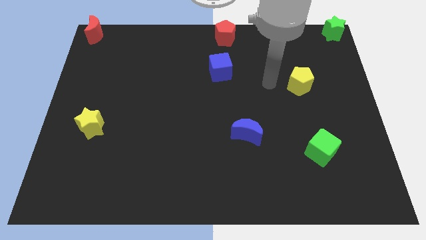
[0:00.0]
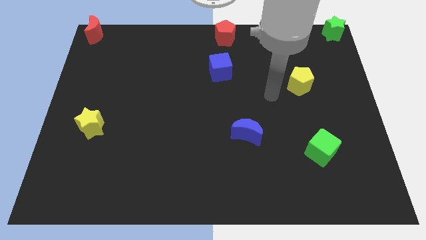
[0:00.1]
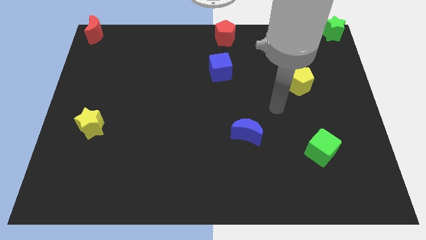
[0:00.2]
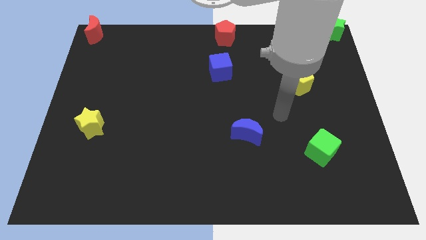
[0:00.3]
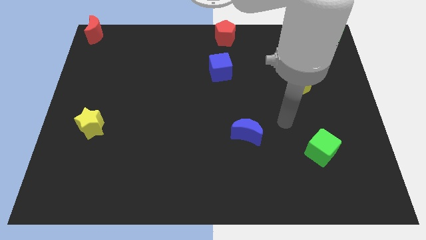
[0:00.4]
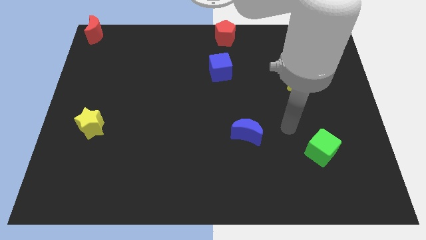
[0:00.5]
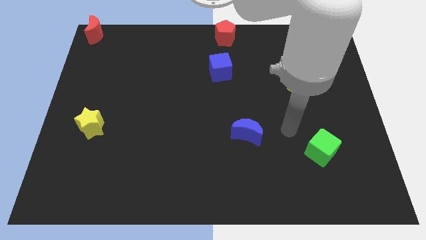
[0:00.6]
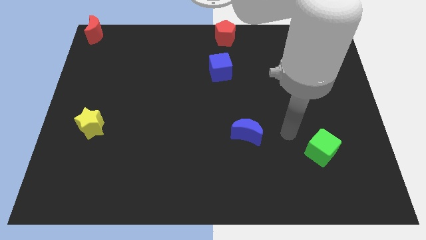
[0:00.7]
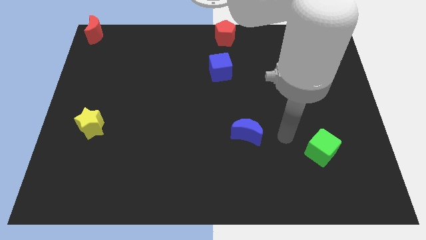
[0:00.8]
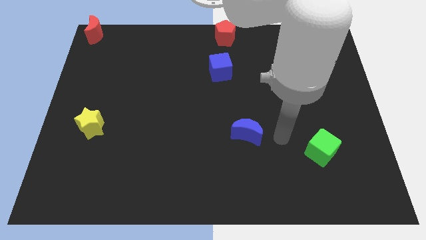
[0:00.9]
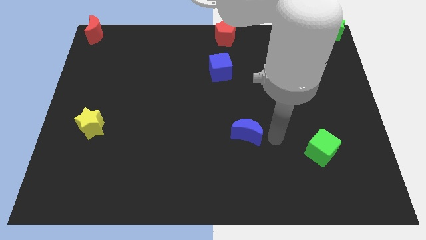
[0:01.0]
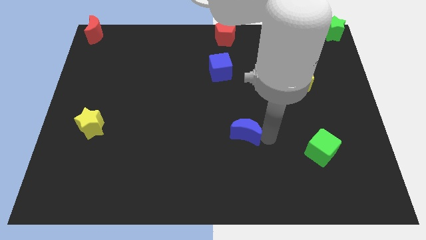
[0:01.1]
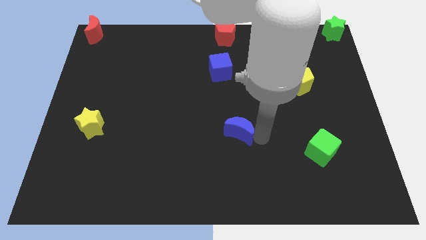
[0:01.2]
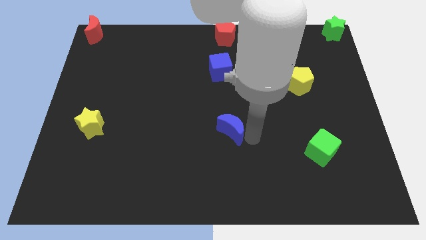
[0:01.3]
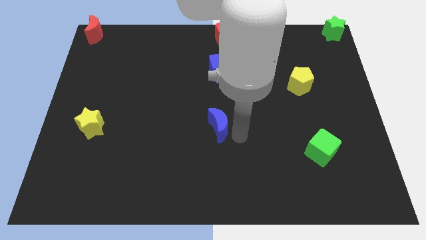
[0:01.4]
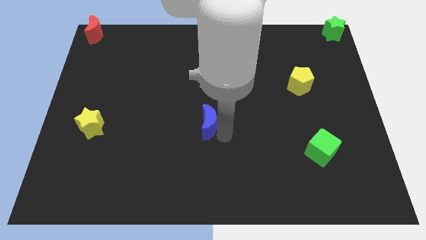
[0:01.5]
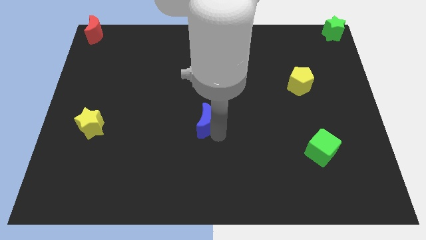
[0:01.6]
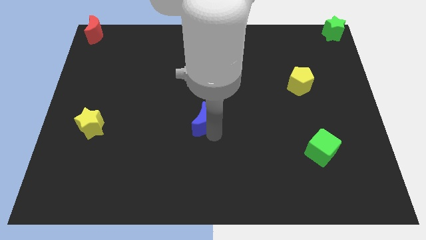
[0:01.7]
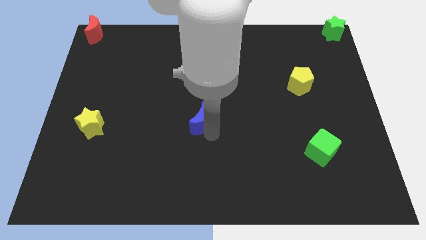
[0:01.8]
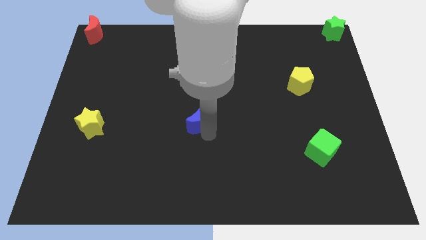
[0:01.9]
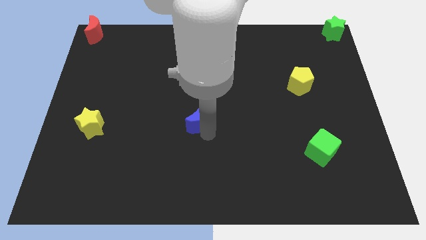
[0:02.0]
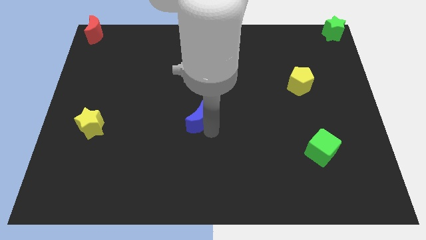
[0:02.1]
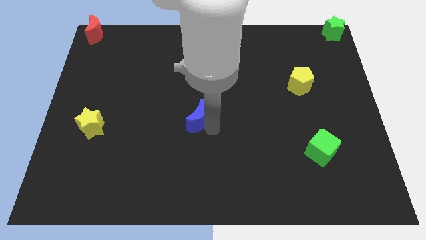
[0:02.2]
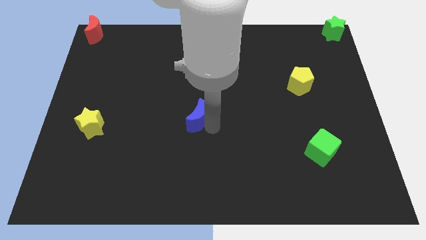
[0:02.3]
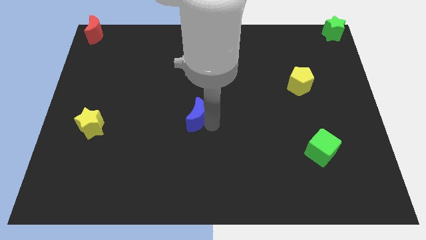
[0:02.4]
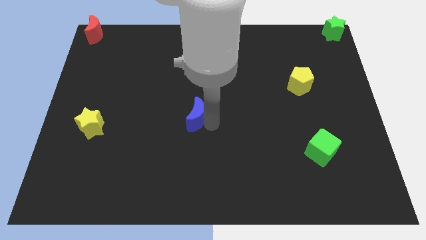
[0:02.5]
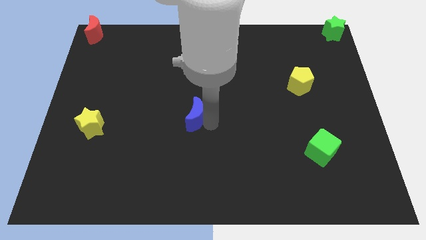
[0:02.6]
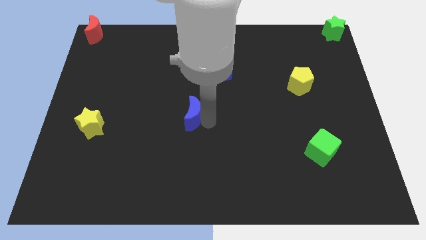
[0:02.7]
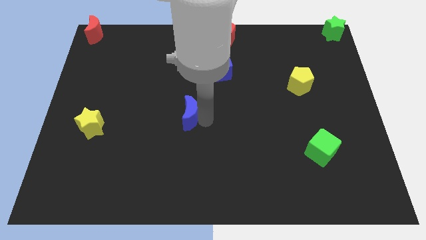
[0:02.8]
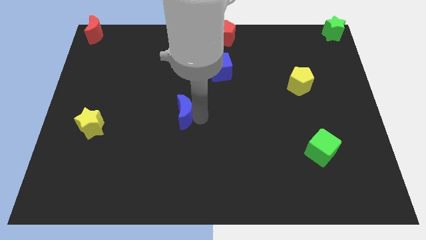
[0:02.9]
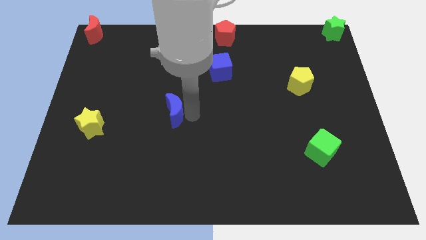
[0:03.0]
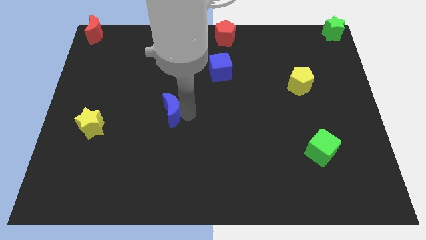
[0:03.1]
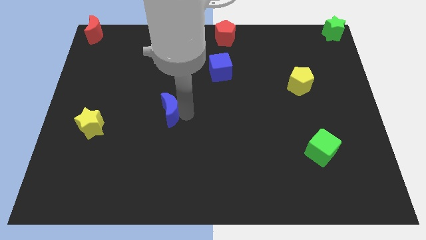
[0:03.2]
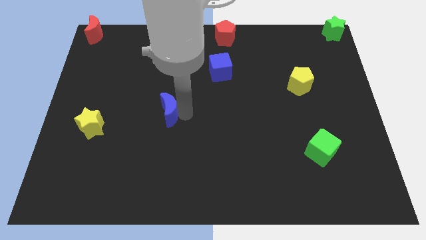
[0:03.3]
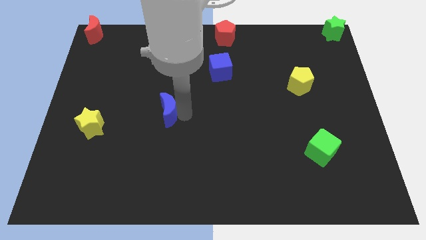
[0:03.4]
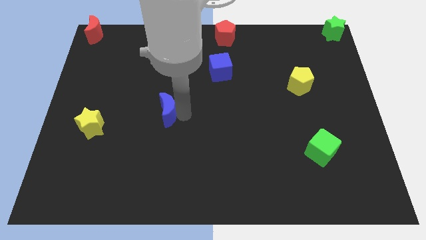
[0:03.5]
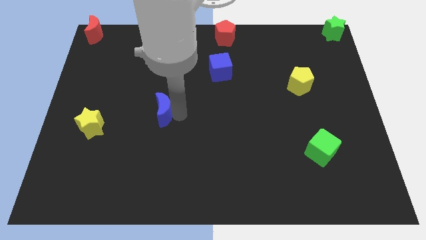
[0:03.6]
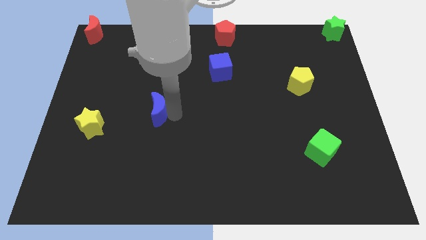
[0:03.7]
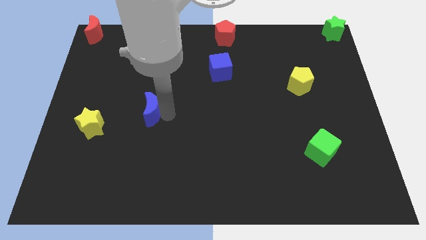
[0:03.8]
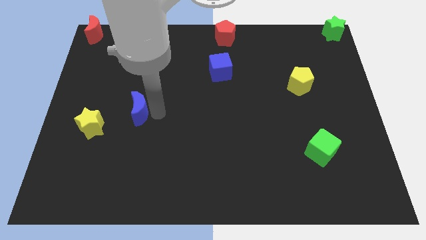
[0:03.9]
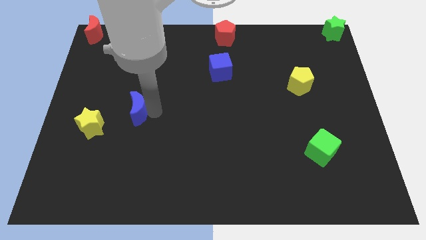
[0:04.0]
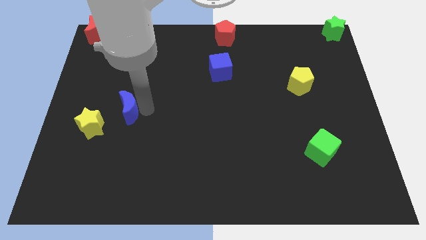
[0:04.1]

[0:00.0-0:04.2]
move the blue crescent towards the yellow star

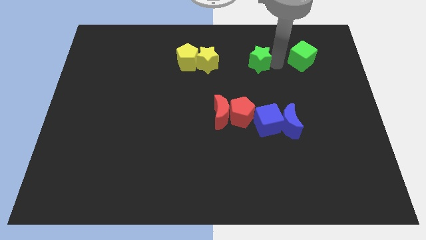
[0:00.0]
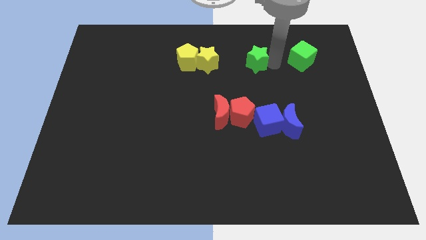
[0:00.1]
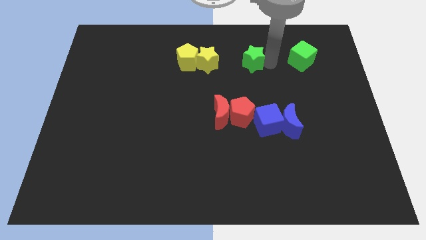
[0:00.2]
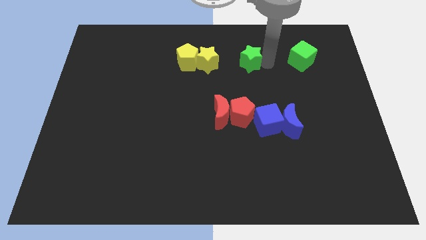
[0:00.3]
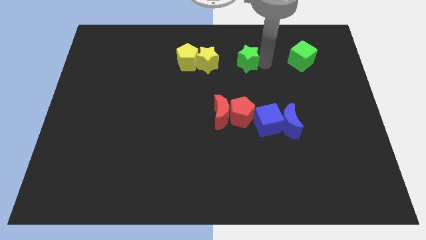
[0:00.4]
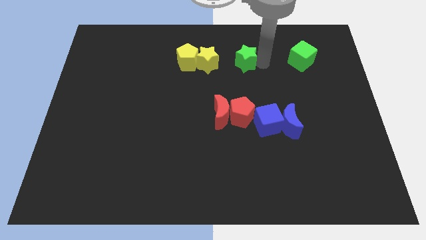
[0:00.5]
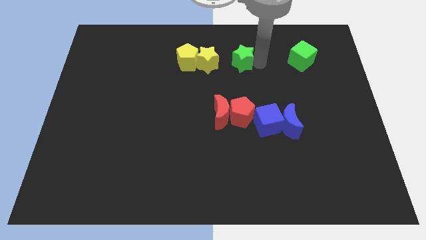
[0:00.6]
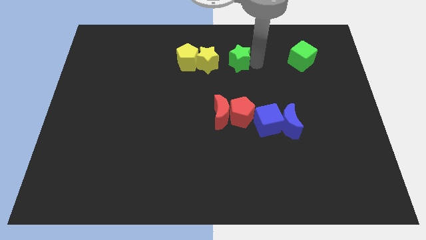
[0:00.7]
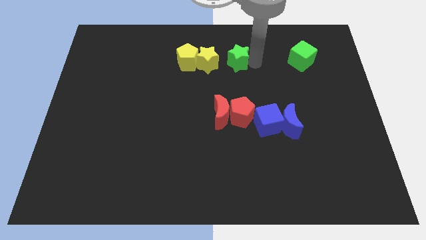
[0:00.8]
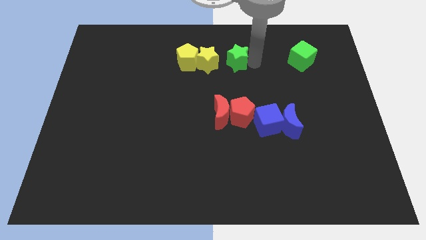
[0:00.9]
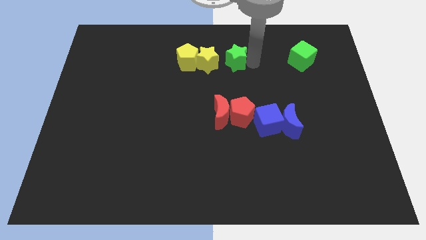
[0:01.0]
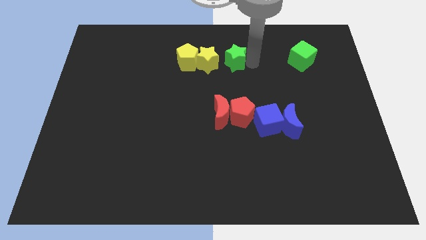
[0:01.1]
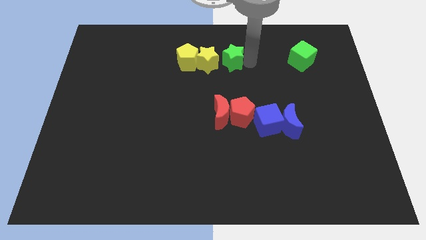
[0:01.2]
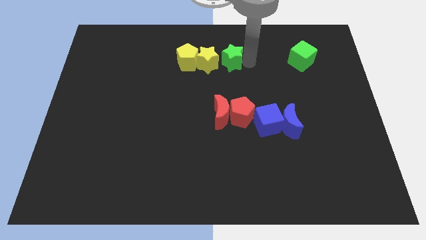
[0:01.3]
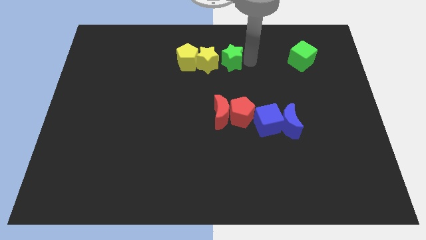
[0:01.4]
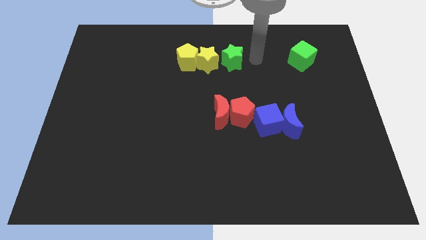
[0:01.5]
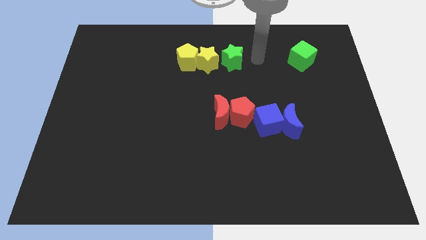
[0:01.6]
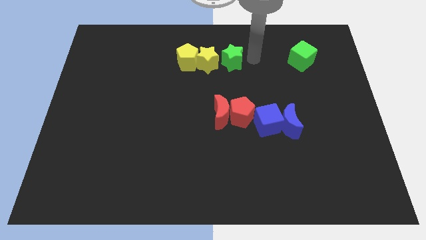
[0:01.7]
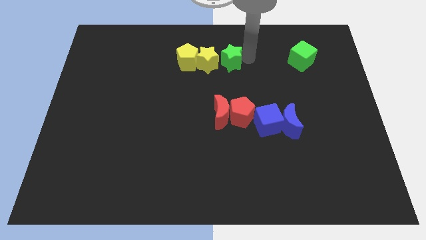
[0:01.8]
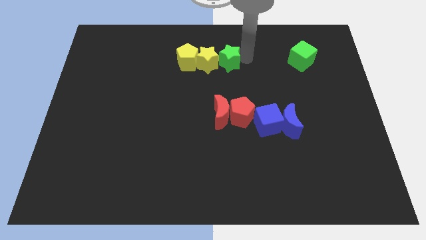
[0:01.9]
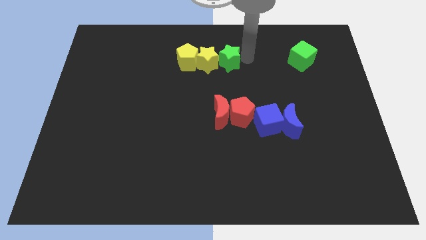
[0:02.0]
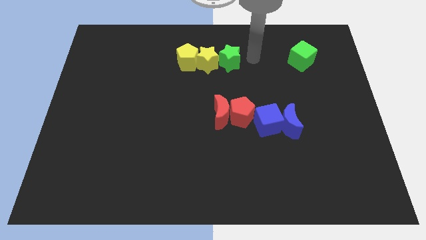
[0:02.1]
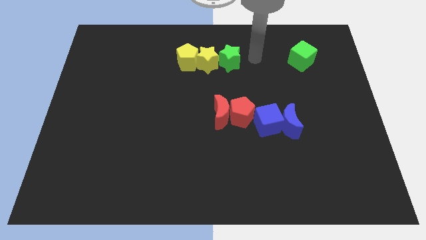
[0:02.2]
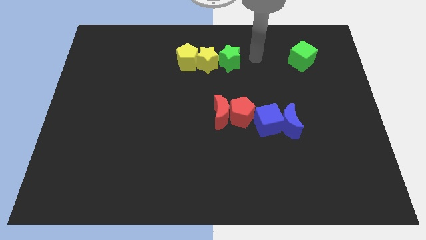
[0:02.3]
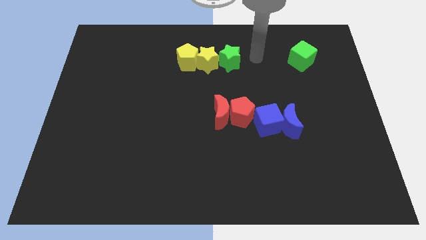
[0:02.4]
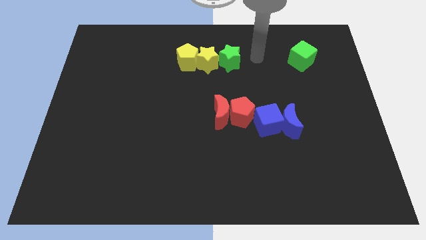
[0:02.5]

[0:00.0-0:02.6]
slide the green star to the left side of the yellow star

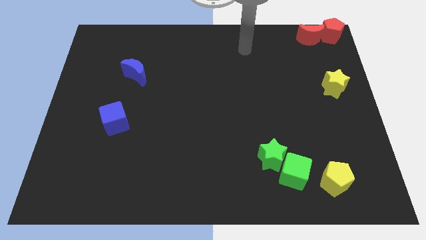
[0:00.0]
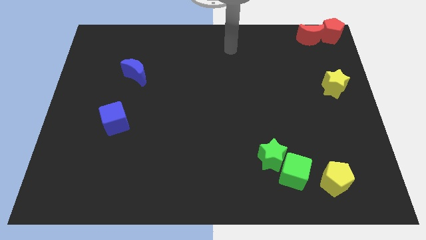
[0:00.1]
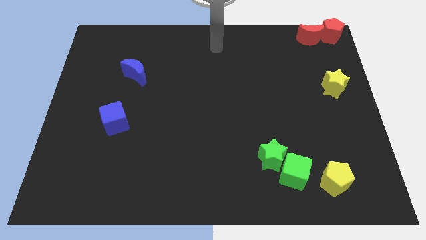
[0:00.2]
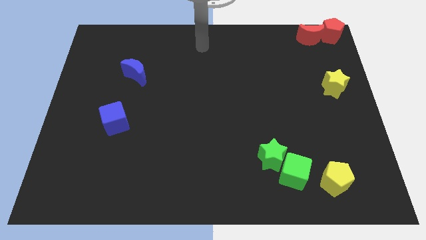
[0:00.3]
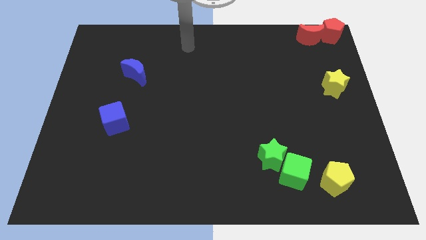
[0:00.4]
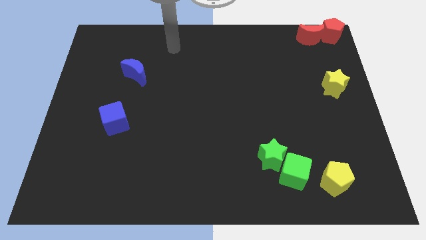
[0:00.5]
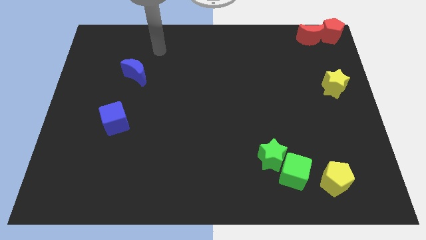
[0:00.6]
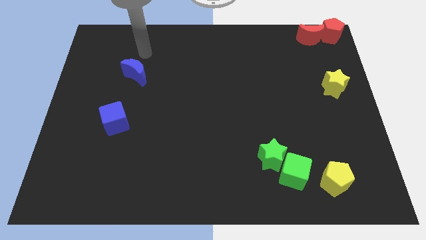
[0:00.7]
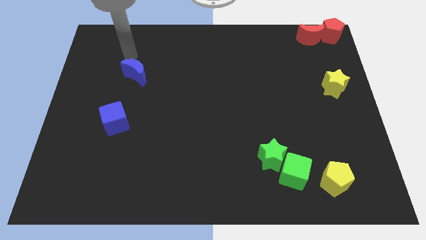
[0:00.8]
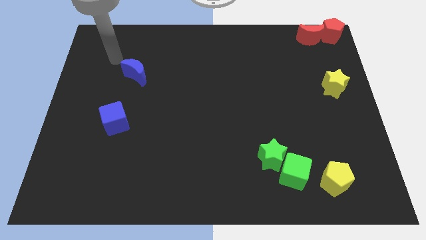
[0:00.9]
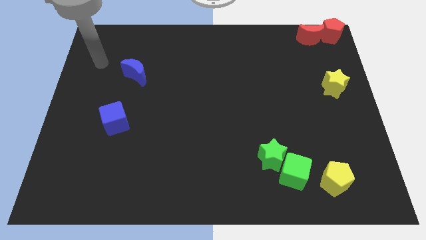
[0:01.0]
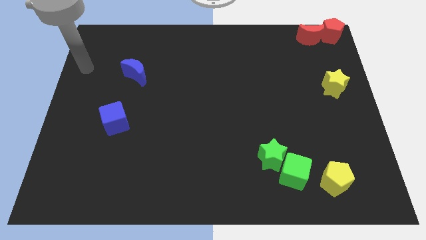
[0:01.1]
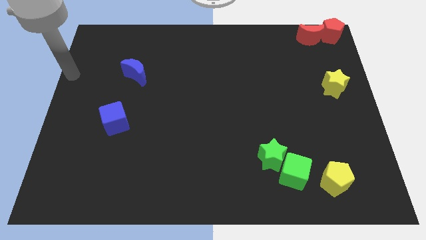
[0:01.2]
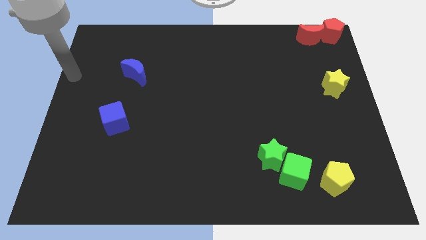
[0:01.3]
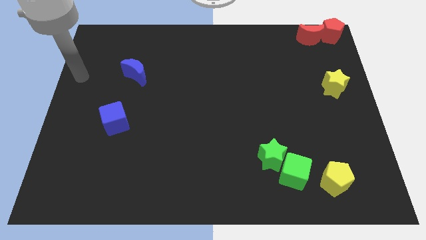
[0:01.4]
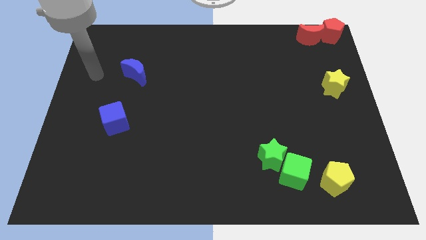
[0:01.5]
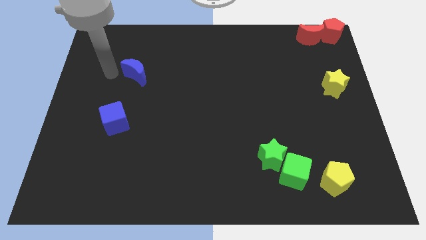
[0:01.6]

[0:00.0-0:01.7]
place your arm to the left of the blue moon

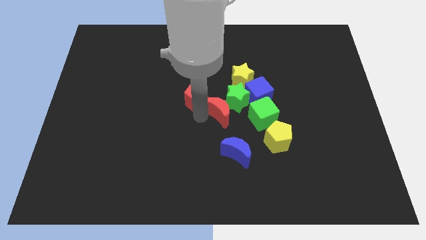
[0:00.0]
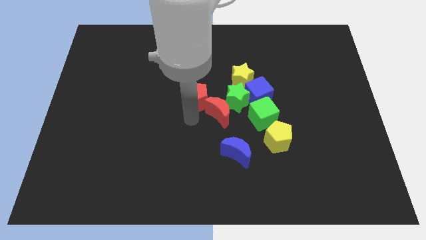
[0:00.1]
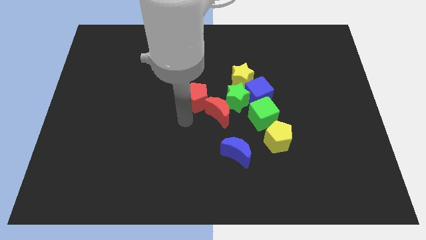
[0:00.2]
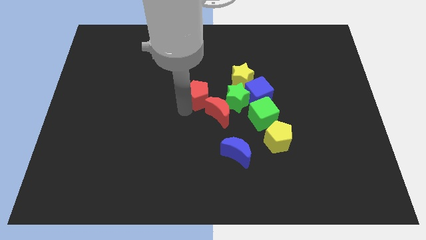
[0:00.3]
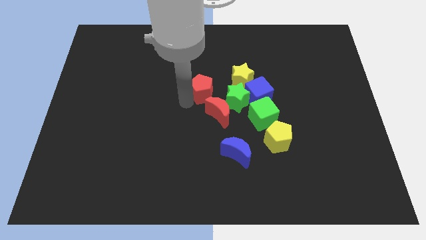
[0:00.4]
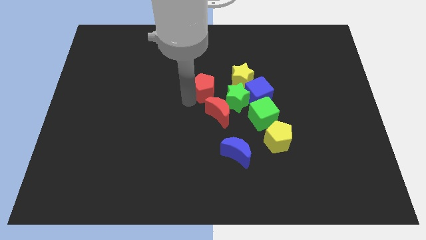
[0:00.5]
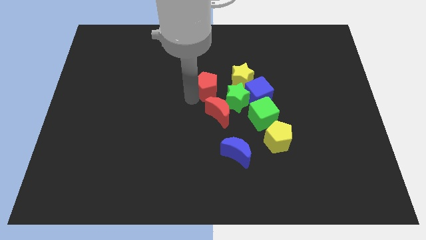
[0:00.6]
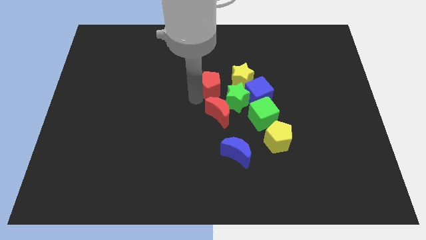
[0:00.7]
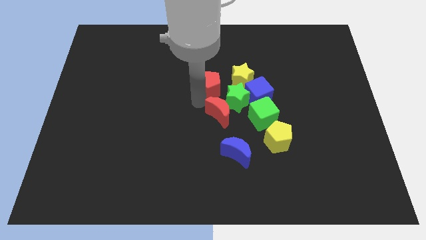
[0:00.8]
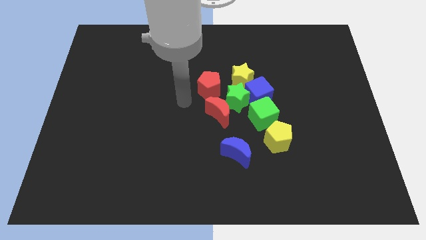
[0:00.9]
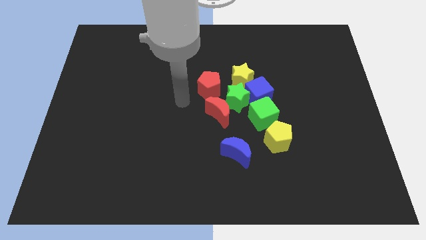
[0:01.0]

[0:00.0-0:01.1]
place the red pentagon on top of red crecsent
